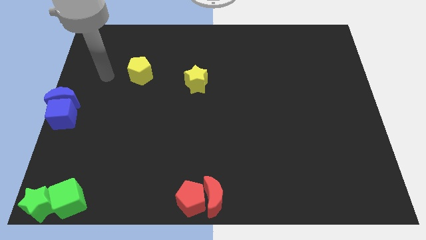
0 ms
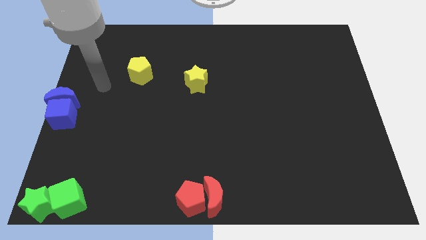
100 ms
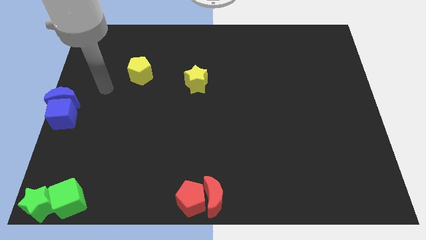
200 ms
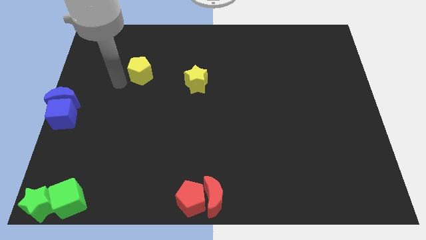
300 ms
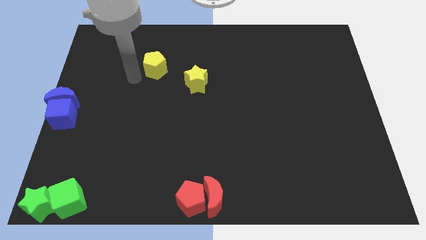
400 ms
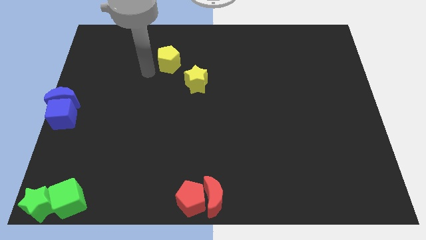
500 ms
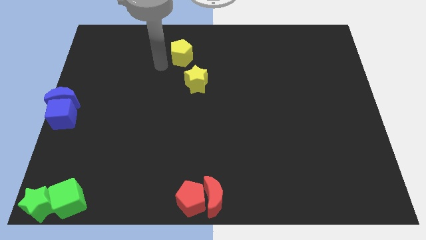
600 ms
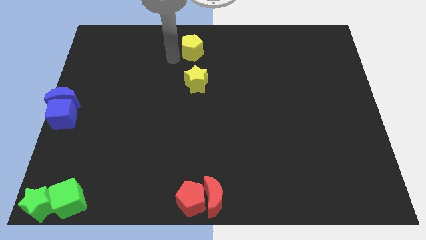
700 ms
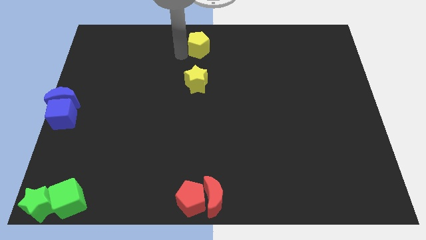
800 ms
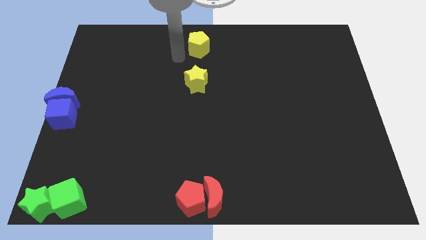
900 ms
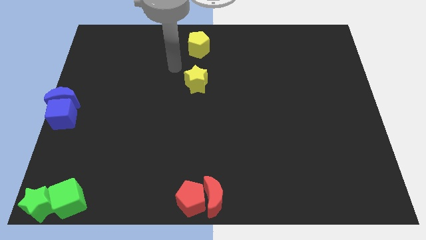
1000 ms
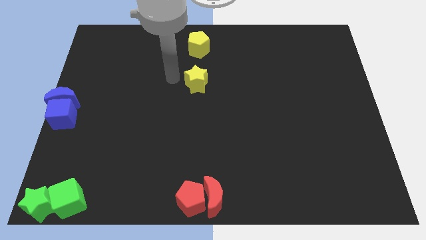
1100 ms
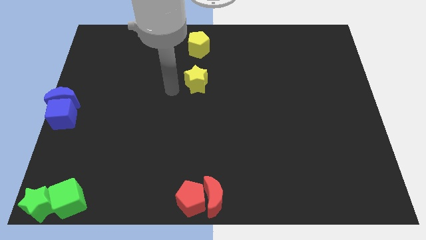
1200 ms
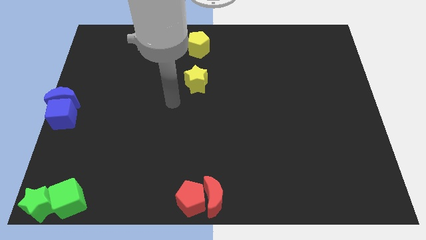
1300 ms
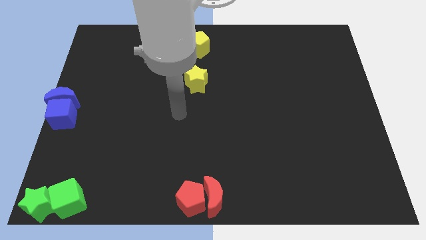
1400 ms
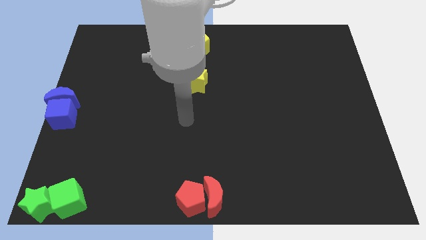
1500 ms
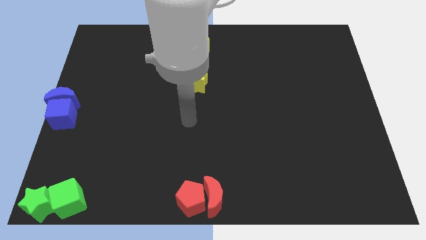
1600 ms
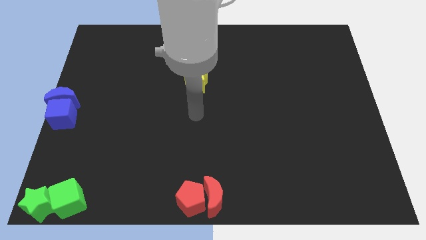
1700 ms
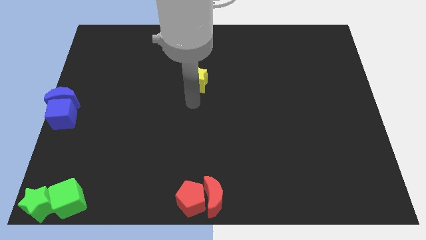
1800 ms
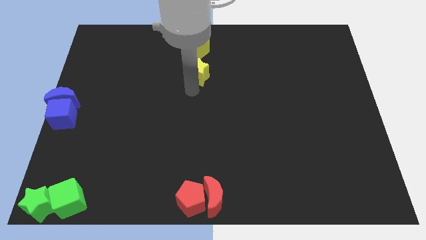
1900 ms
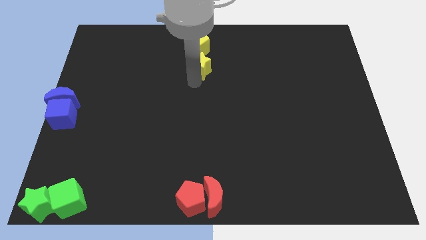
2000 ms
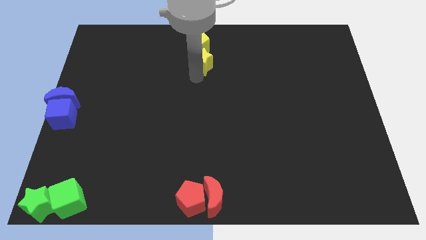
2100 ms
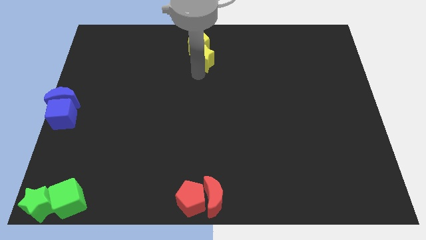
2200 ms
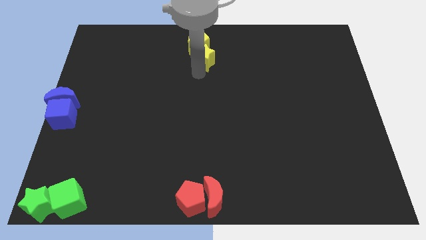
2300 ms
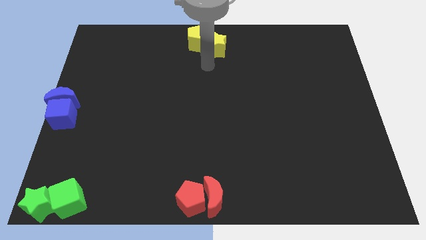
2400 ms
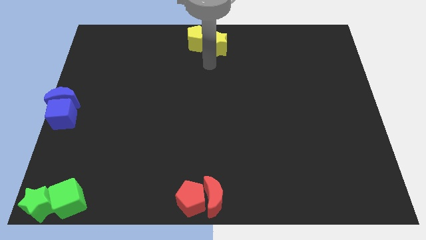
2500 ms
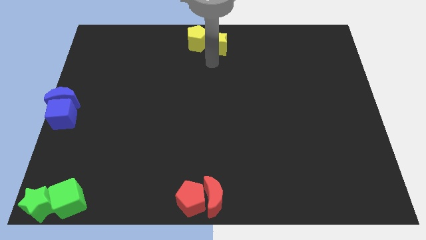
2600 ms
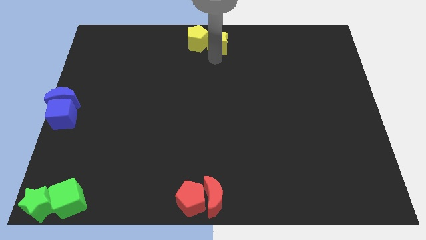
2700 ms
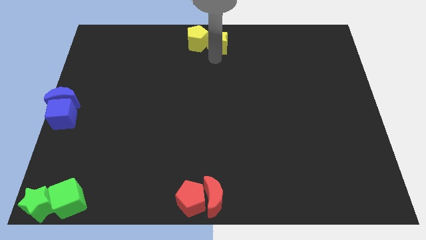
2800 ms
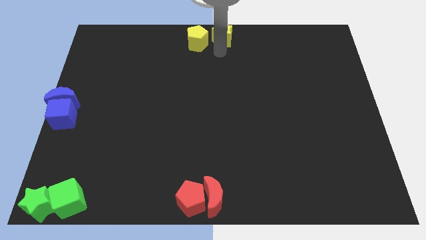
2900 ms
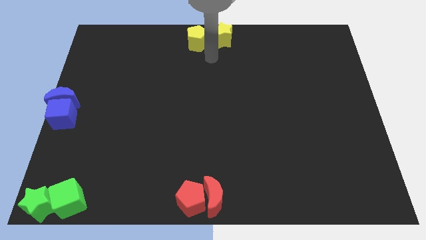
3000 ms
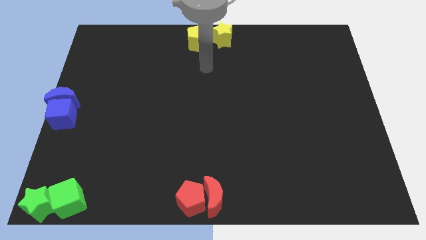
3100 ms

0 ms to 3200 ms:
move both the yellow blocks at the top center of the board

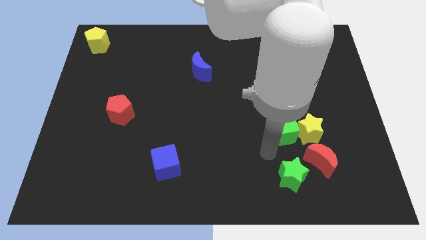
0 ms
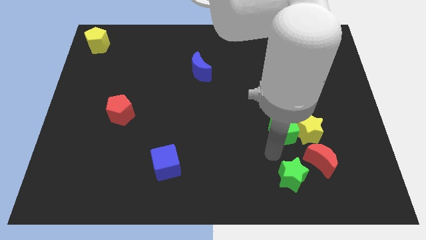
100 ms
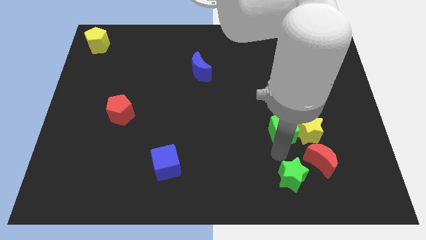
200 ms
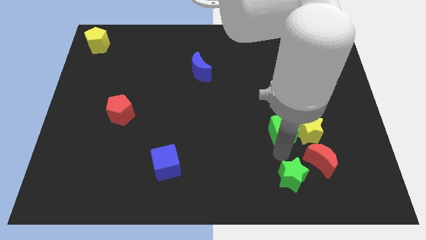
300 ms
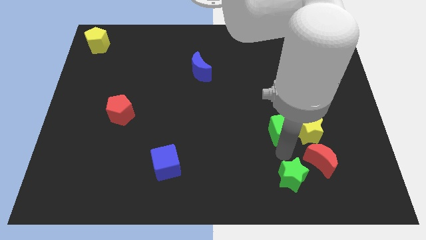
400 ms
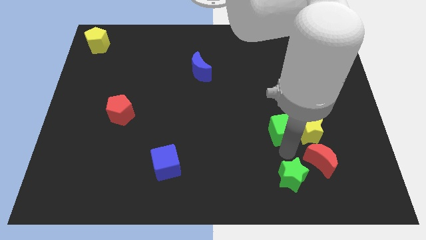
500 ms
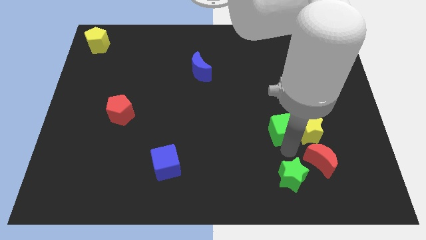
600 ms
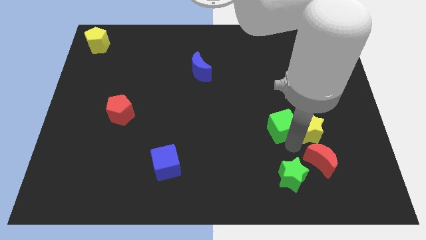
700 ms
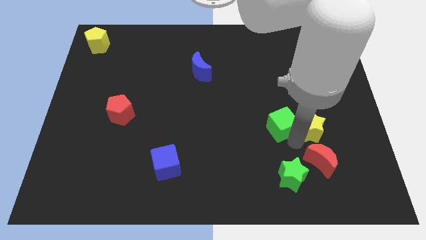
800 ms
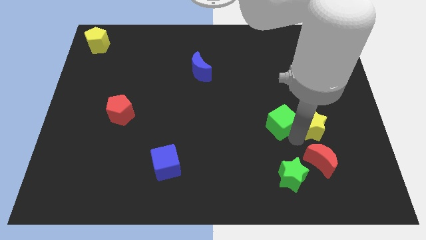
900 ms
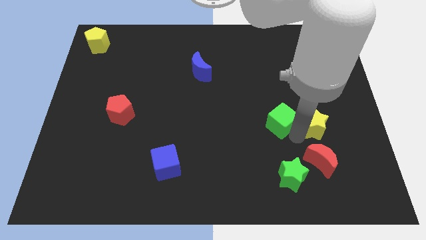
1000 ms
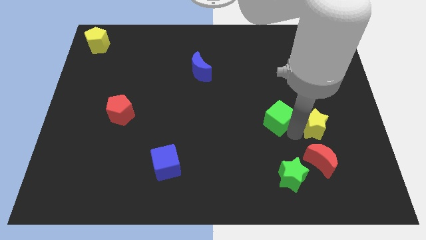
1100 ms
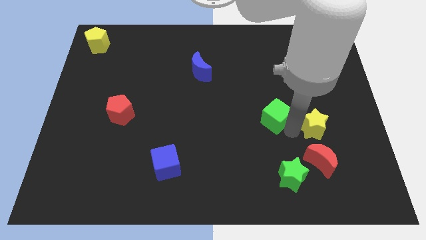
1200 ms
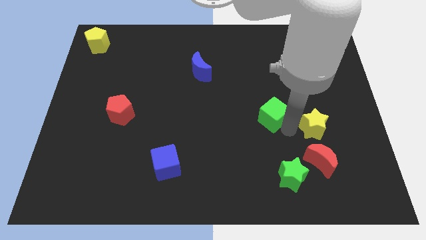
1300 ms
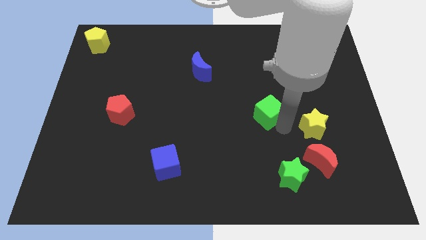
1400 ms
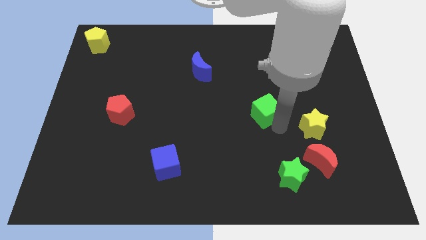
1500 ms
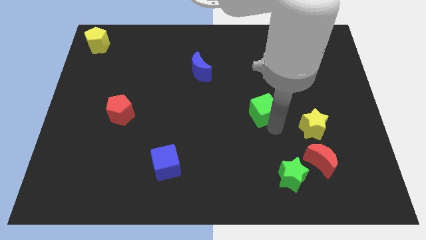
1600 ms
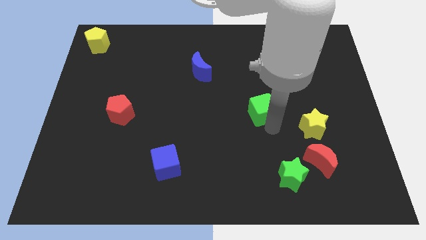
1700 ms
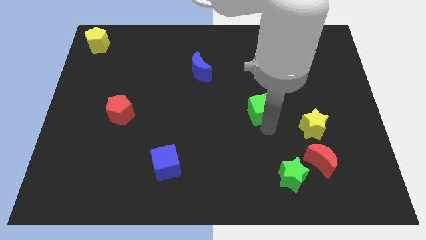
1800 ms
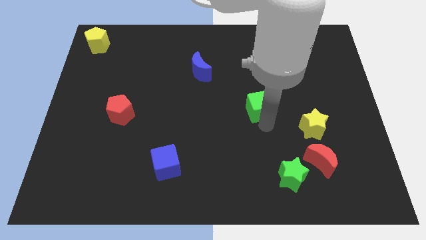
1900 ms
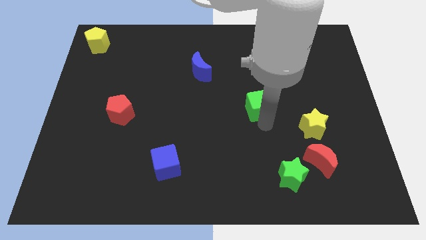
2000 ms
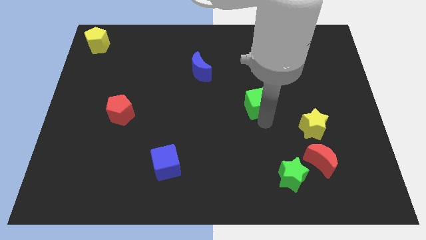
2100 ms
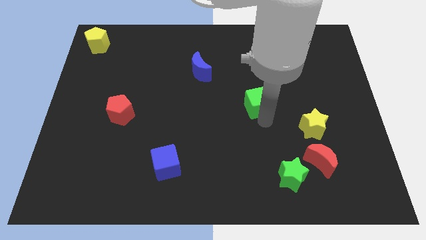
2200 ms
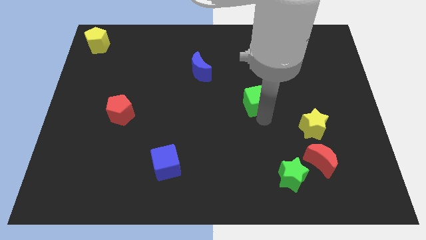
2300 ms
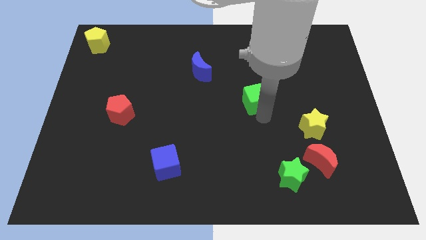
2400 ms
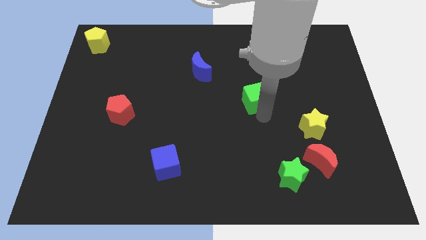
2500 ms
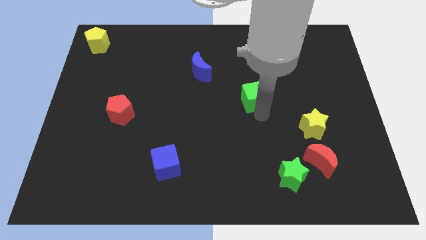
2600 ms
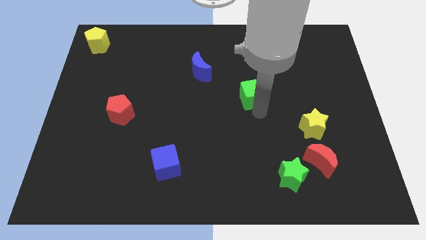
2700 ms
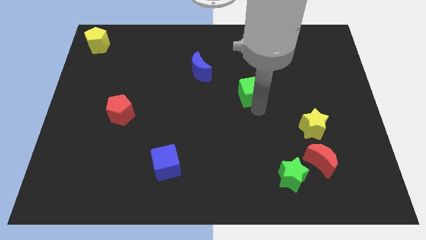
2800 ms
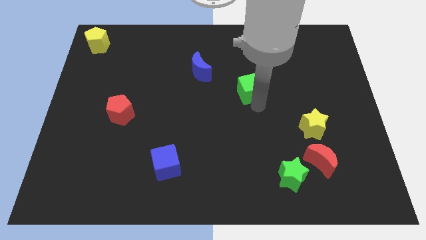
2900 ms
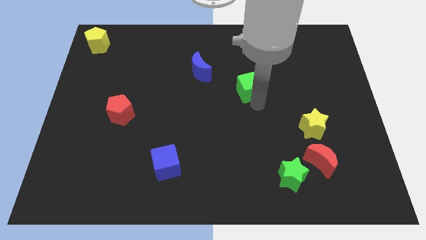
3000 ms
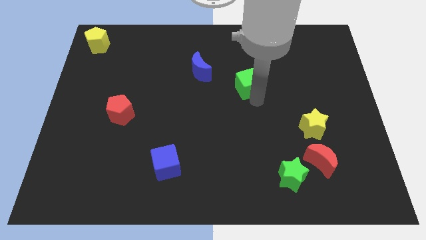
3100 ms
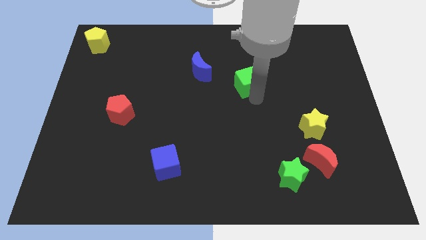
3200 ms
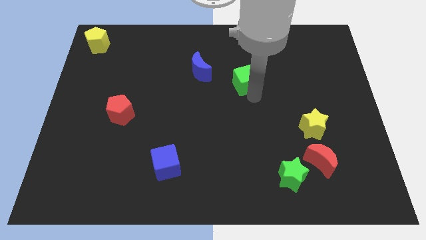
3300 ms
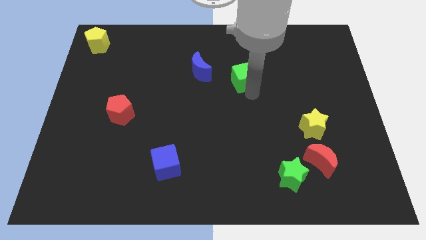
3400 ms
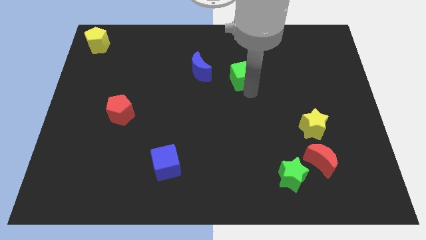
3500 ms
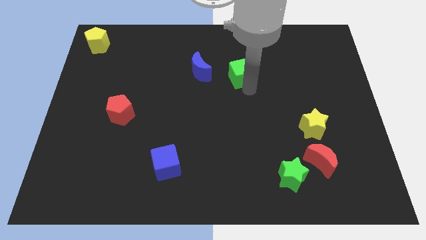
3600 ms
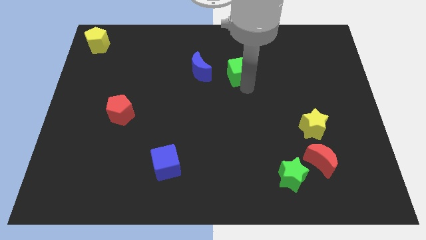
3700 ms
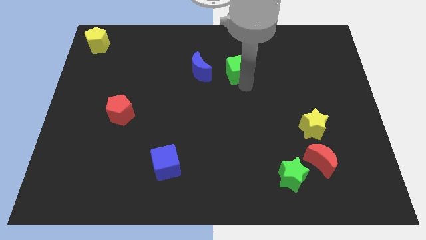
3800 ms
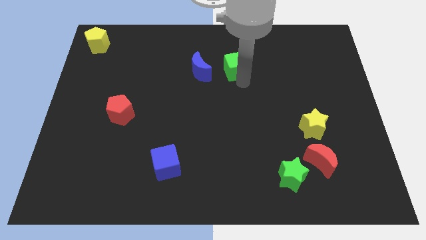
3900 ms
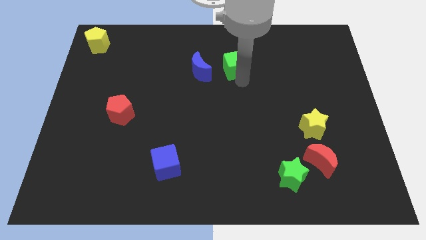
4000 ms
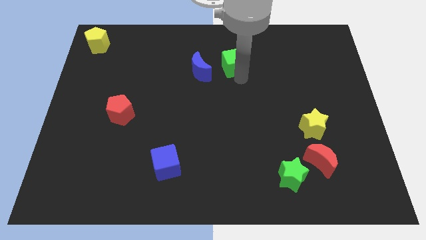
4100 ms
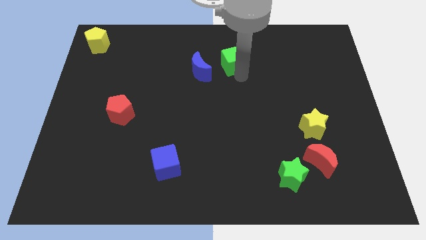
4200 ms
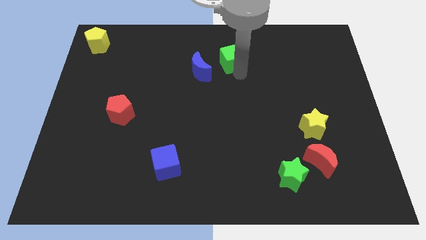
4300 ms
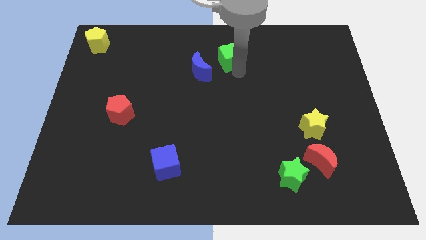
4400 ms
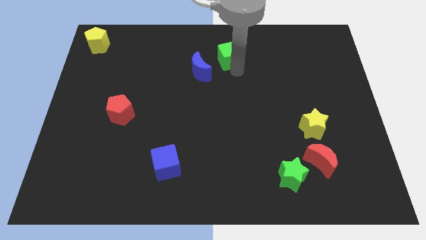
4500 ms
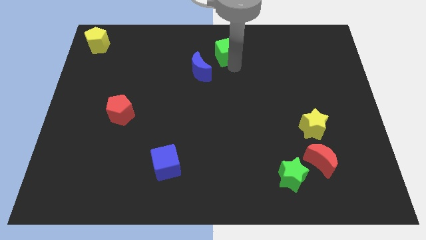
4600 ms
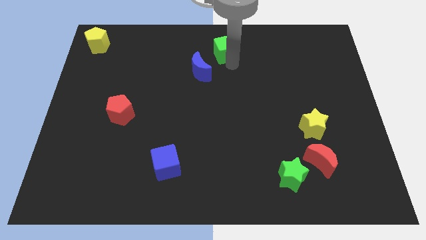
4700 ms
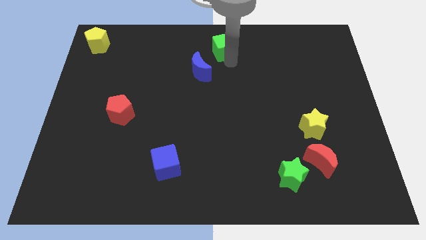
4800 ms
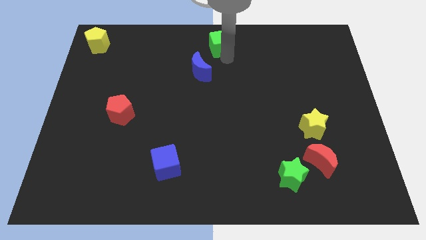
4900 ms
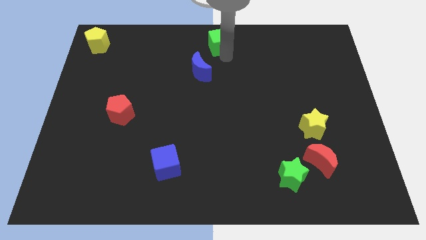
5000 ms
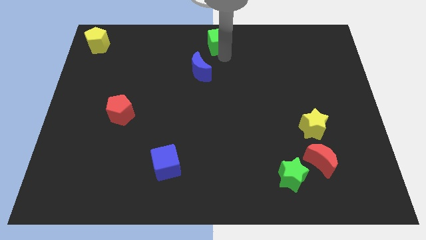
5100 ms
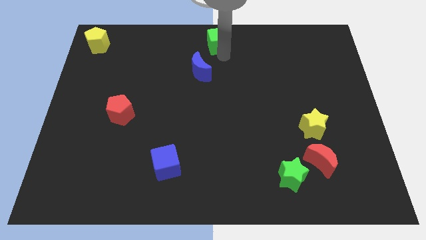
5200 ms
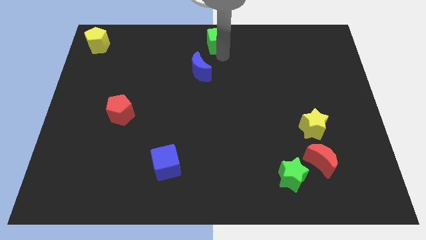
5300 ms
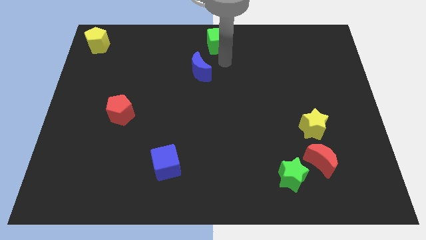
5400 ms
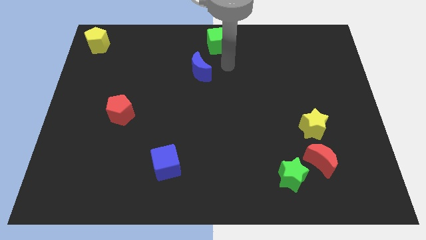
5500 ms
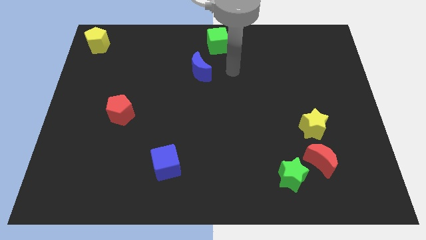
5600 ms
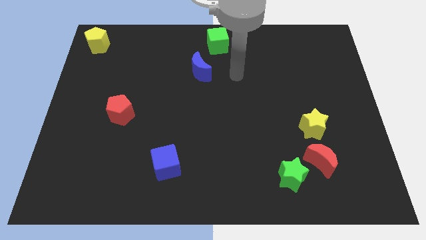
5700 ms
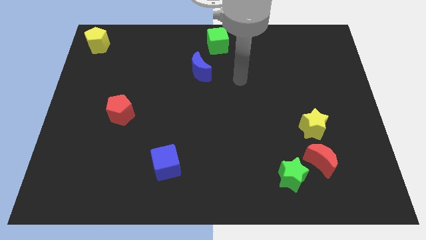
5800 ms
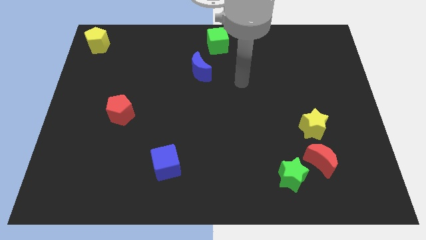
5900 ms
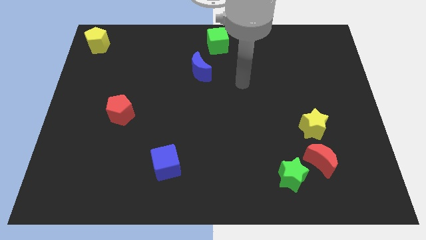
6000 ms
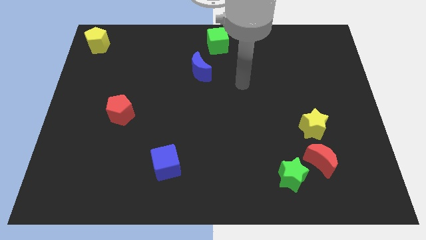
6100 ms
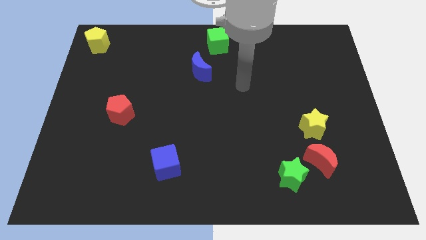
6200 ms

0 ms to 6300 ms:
push the green cube to the top center of the board
